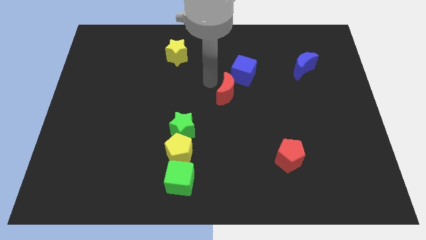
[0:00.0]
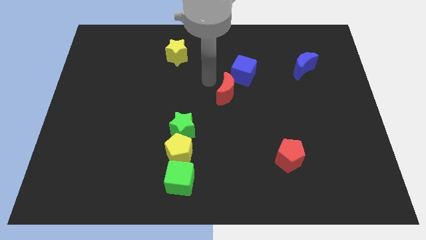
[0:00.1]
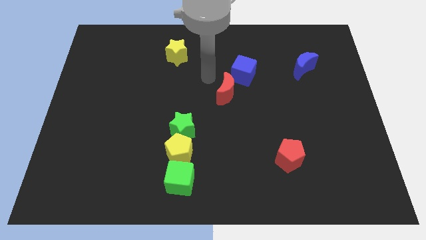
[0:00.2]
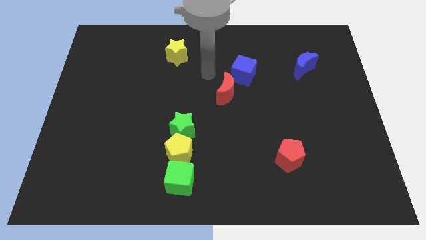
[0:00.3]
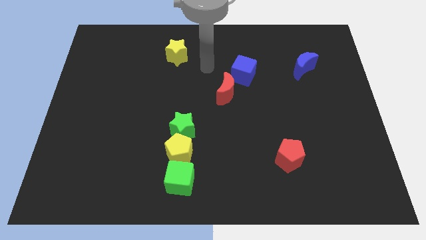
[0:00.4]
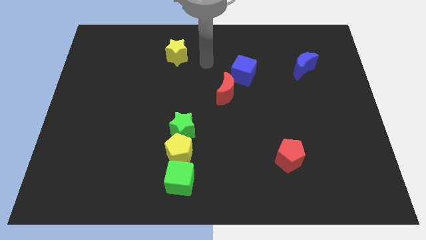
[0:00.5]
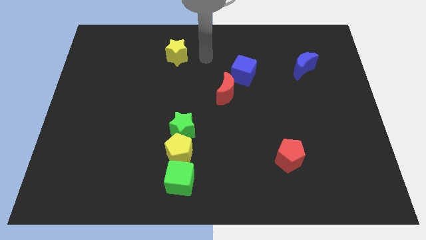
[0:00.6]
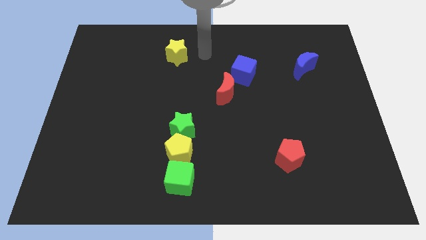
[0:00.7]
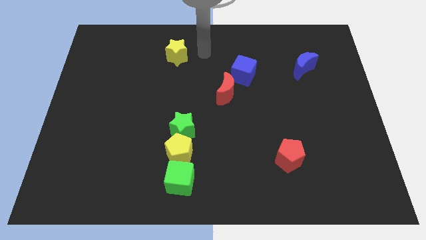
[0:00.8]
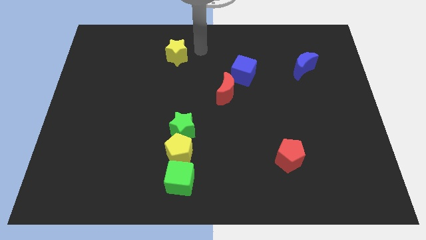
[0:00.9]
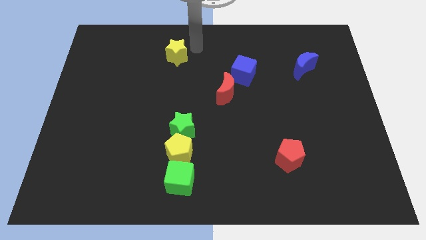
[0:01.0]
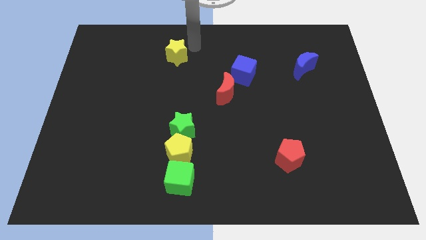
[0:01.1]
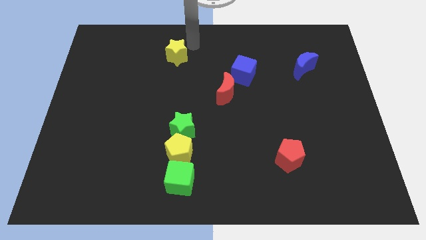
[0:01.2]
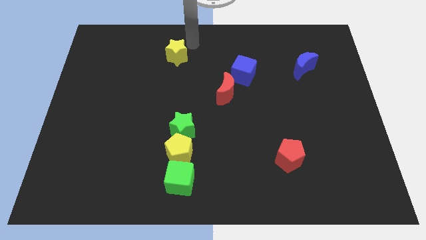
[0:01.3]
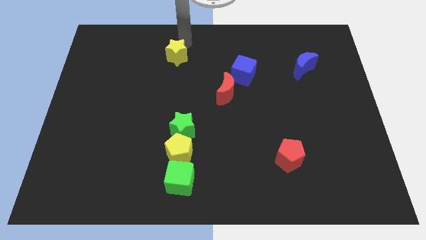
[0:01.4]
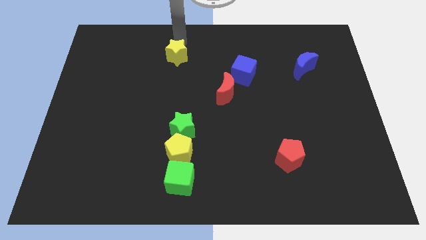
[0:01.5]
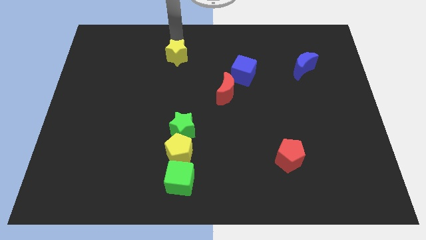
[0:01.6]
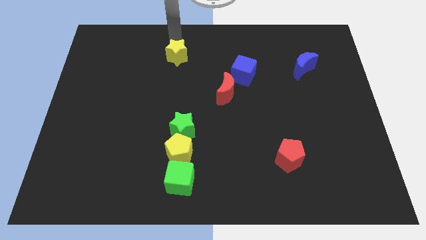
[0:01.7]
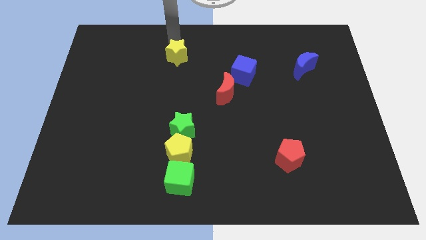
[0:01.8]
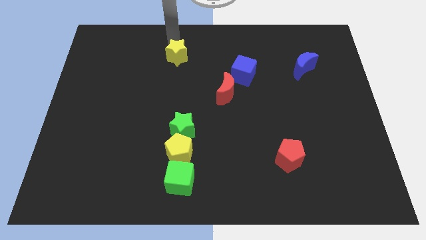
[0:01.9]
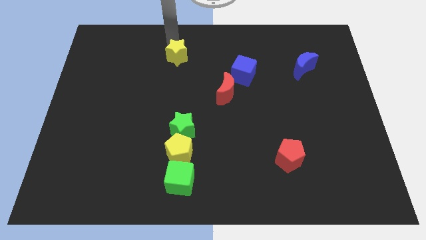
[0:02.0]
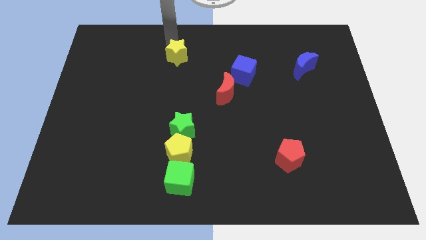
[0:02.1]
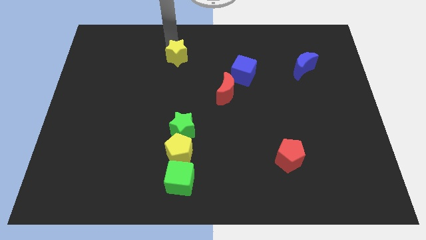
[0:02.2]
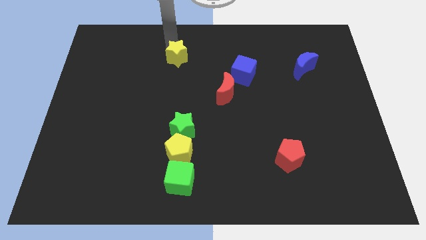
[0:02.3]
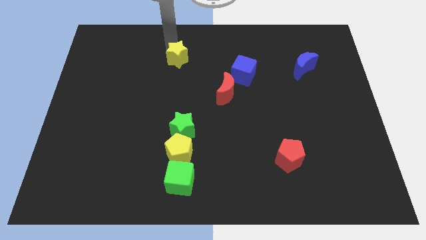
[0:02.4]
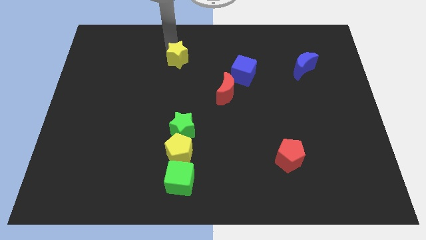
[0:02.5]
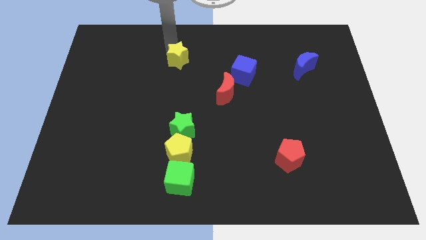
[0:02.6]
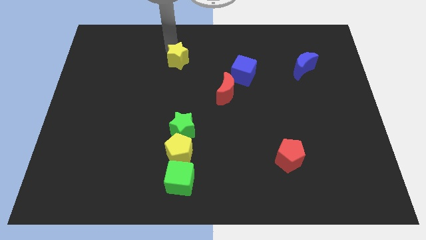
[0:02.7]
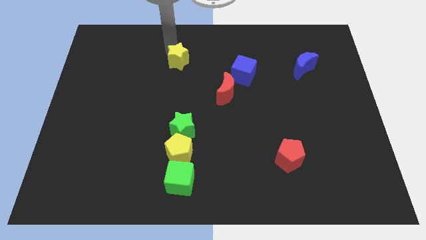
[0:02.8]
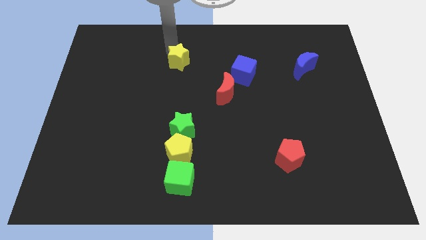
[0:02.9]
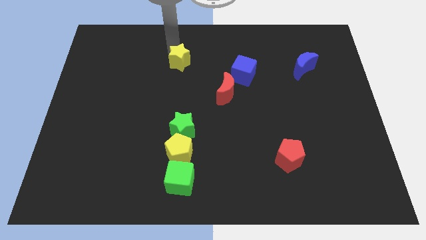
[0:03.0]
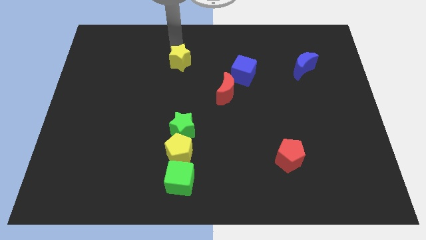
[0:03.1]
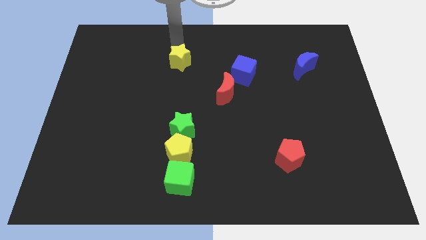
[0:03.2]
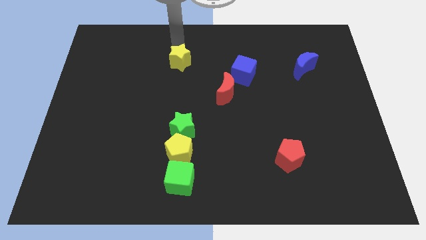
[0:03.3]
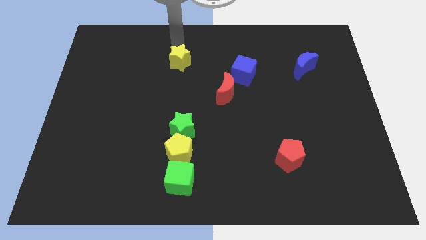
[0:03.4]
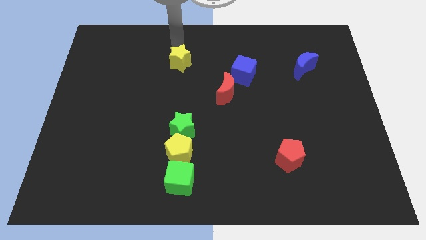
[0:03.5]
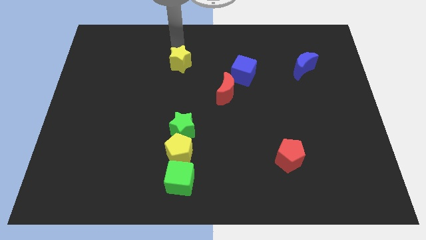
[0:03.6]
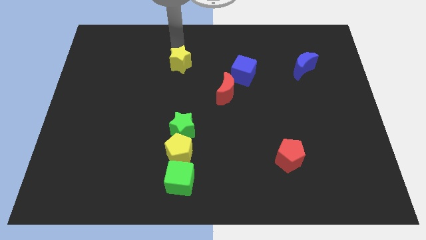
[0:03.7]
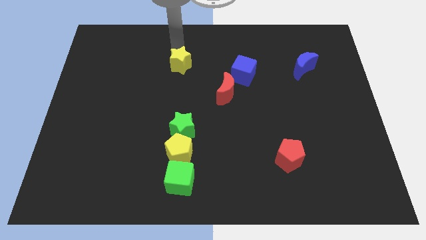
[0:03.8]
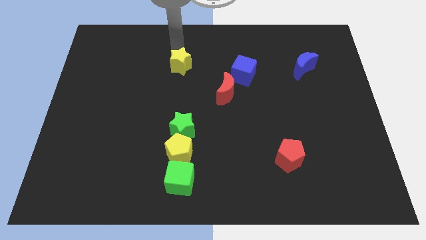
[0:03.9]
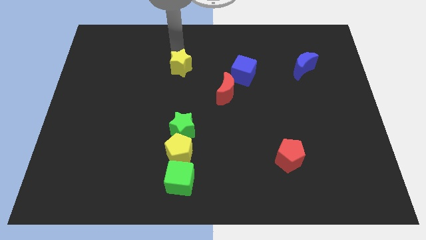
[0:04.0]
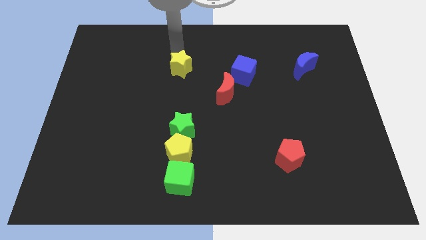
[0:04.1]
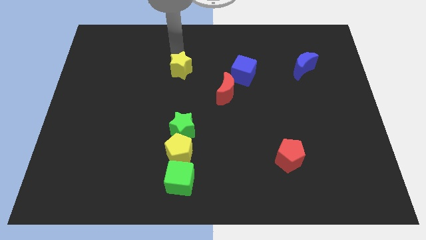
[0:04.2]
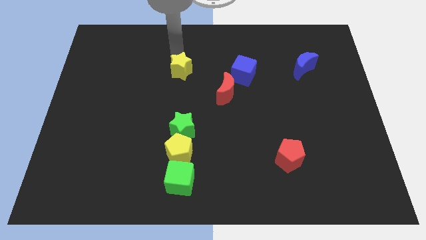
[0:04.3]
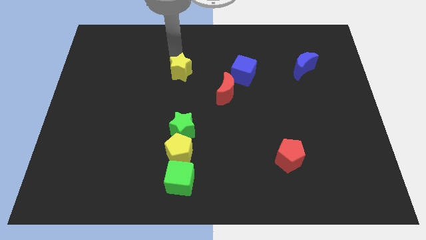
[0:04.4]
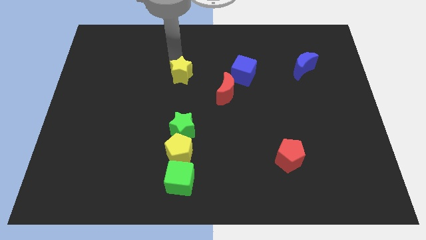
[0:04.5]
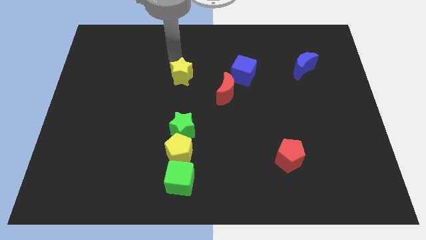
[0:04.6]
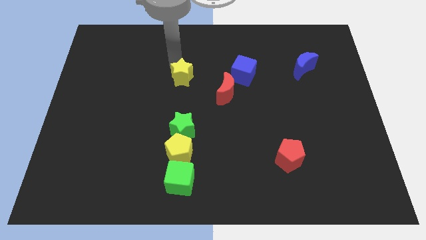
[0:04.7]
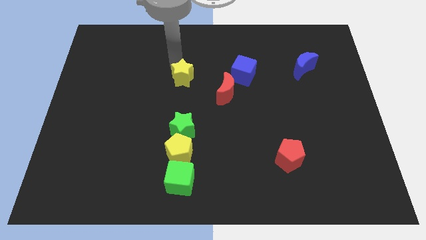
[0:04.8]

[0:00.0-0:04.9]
push the yellow star to the left of the blue cube

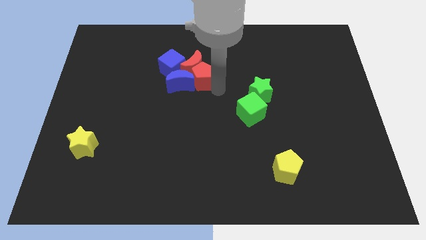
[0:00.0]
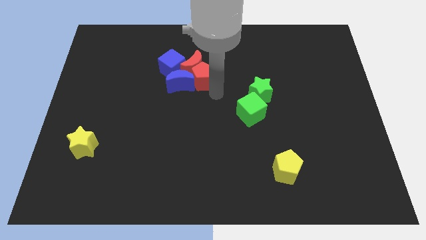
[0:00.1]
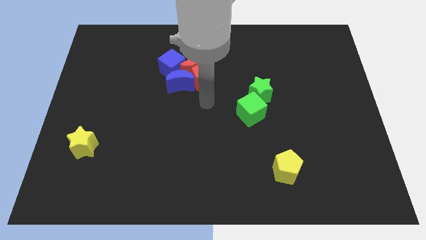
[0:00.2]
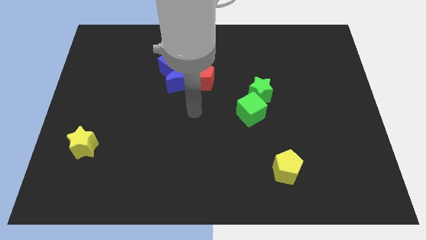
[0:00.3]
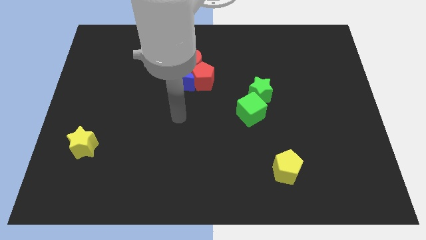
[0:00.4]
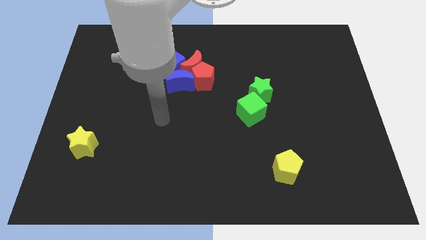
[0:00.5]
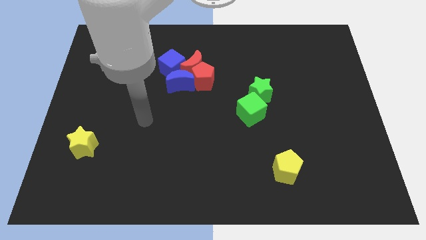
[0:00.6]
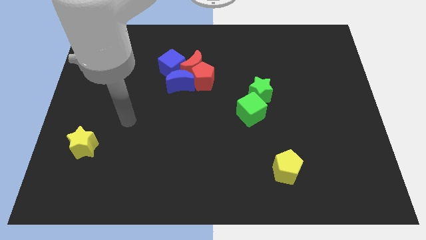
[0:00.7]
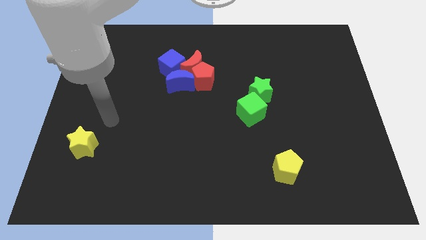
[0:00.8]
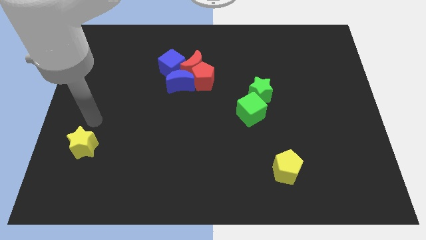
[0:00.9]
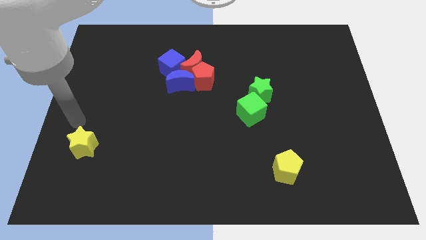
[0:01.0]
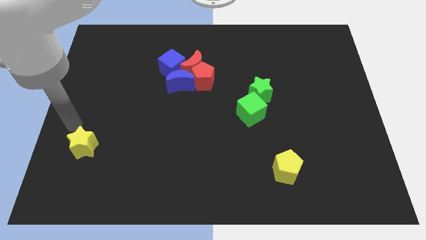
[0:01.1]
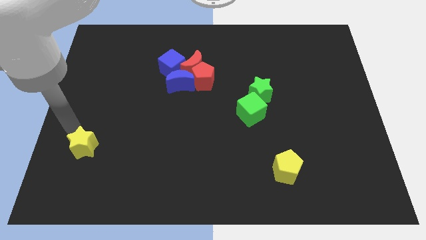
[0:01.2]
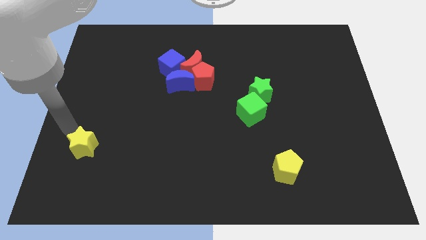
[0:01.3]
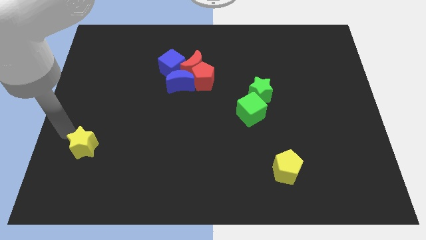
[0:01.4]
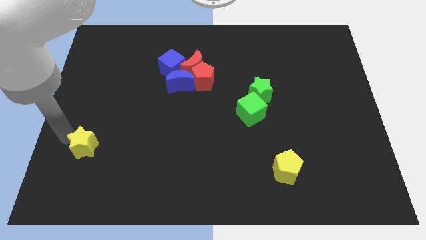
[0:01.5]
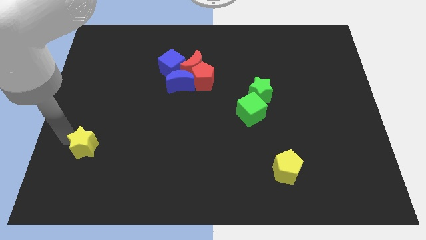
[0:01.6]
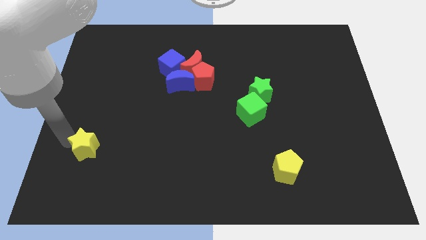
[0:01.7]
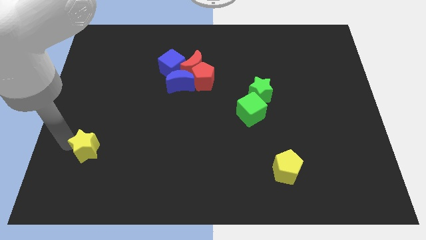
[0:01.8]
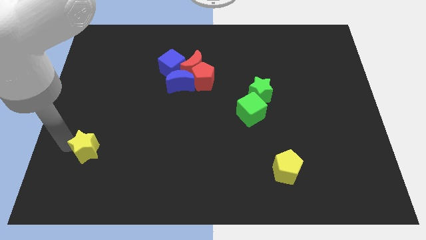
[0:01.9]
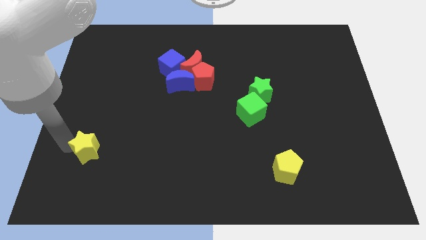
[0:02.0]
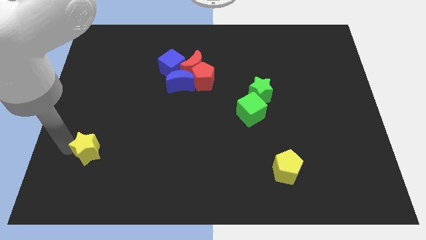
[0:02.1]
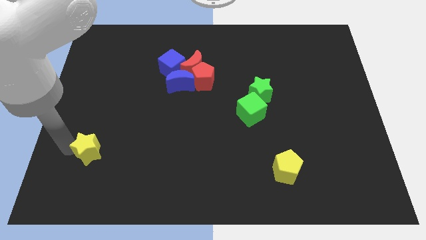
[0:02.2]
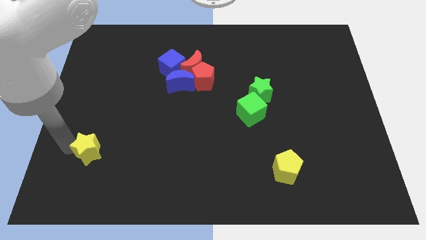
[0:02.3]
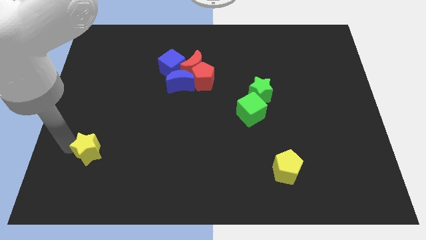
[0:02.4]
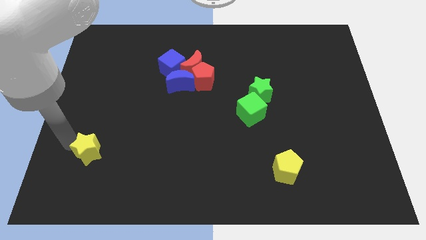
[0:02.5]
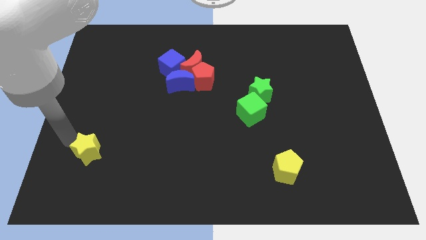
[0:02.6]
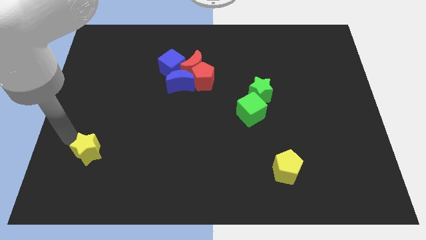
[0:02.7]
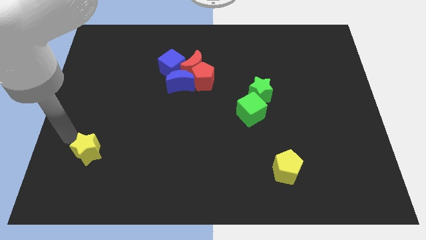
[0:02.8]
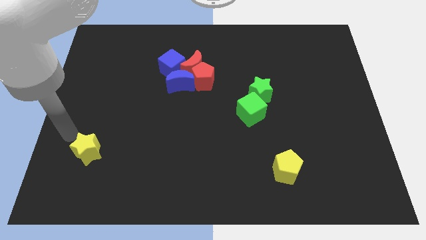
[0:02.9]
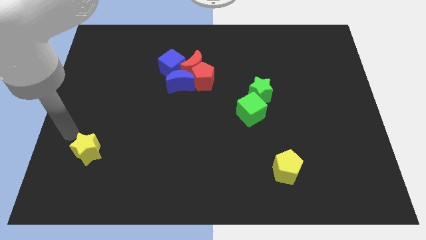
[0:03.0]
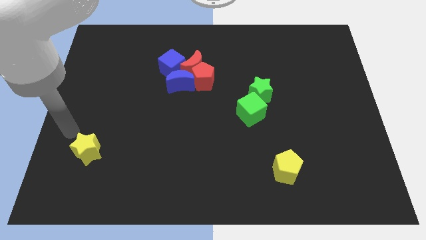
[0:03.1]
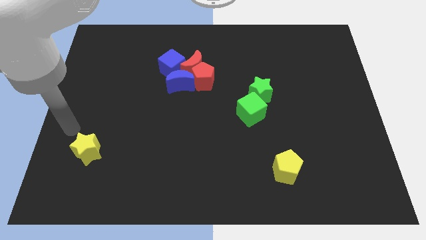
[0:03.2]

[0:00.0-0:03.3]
touch the left side of the yellow star

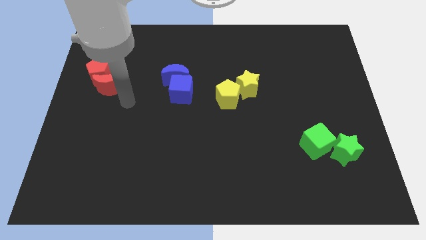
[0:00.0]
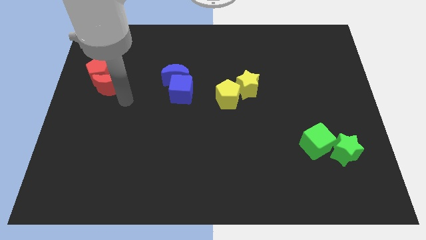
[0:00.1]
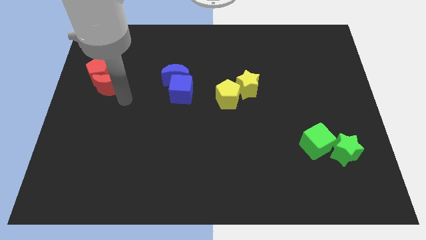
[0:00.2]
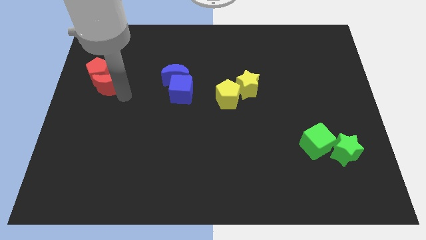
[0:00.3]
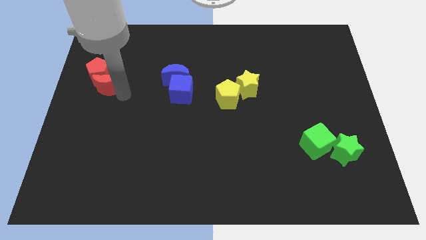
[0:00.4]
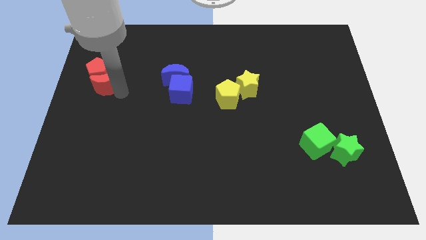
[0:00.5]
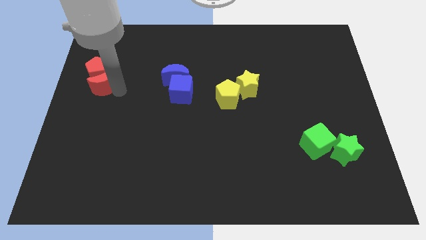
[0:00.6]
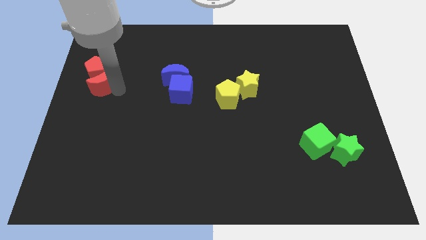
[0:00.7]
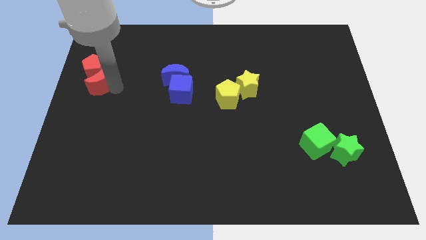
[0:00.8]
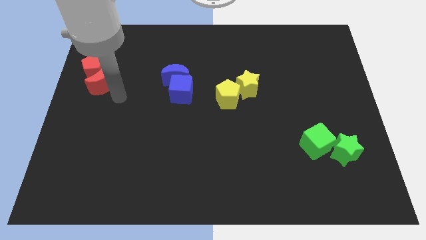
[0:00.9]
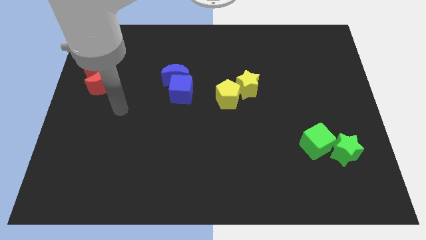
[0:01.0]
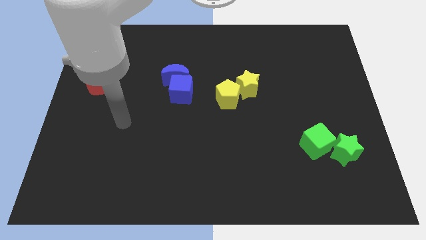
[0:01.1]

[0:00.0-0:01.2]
adjust the red crescent and red pentagon slightly towards the left
